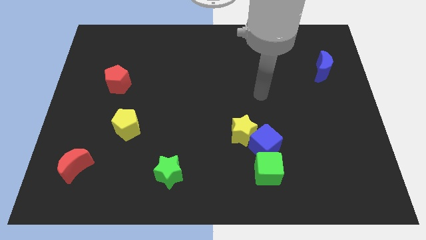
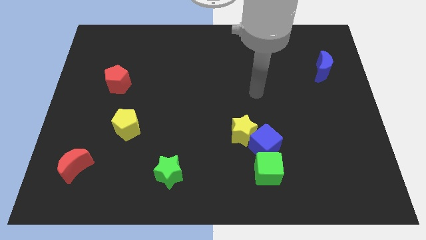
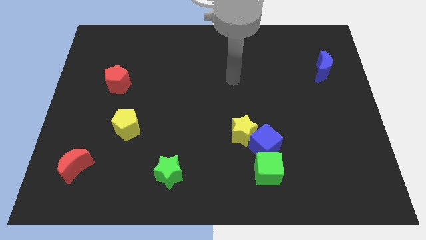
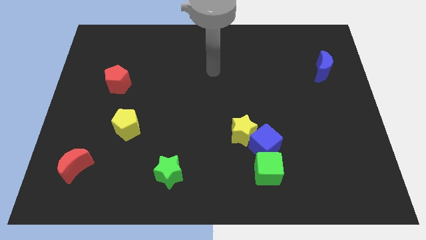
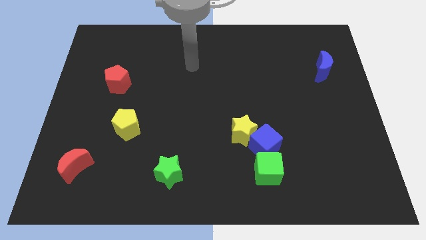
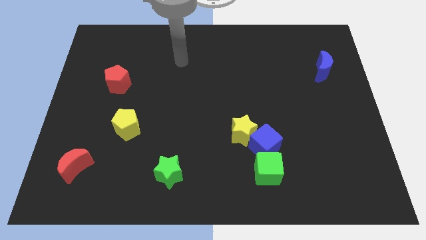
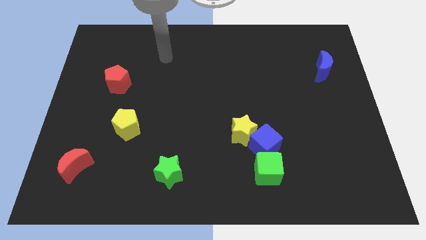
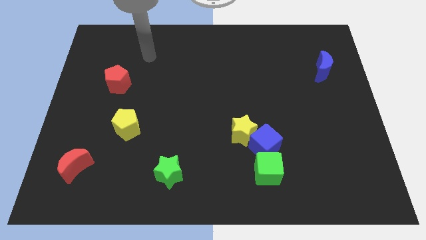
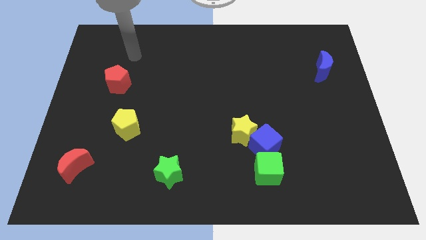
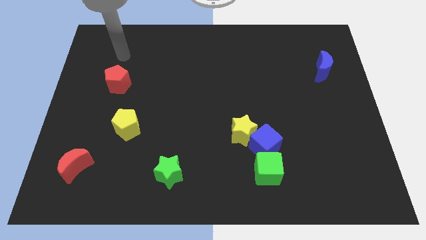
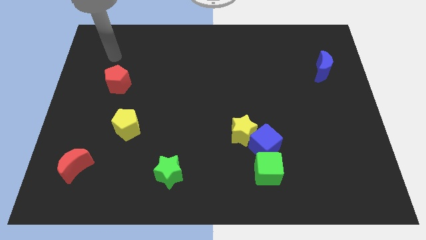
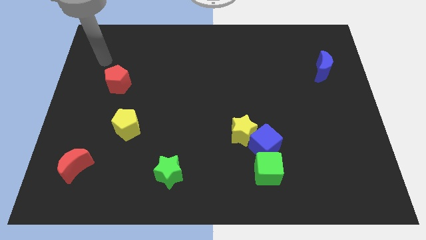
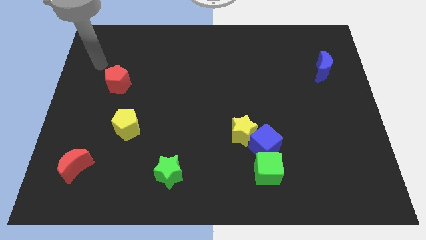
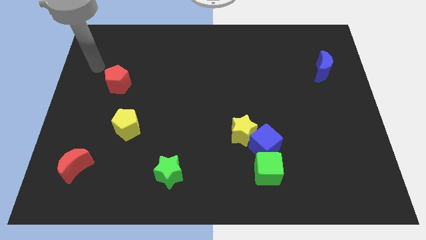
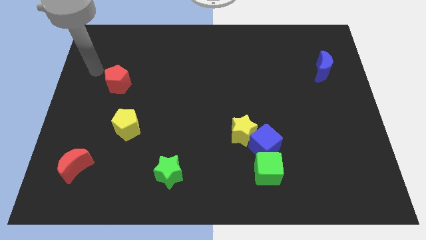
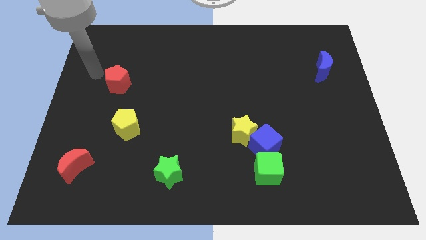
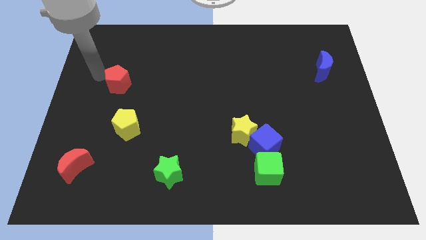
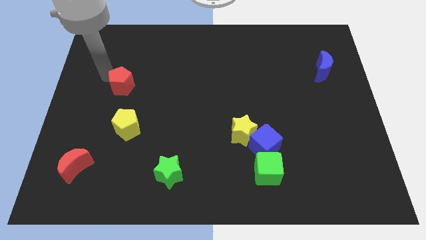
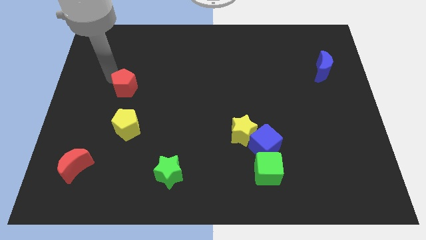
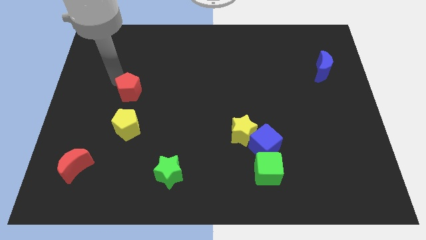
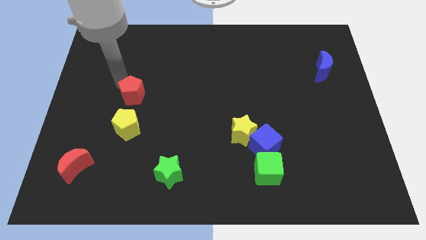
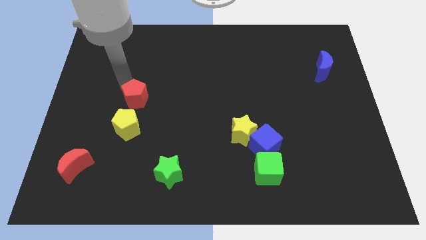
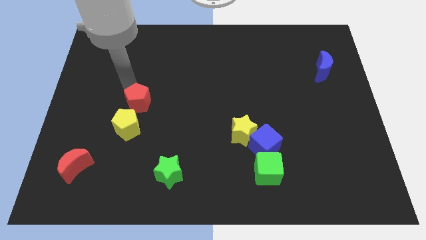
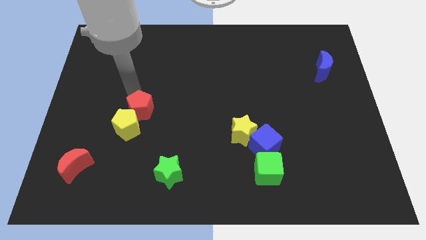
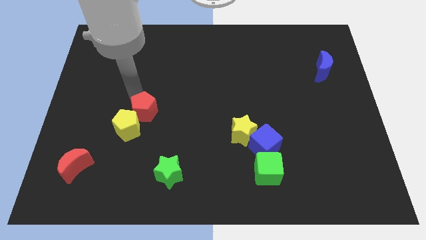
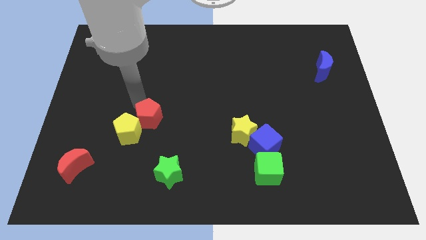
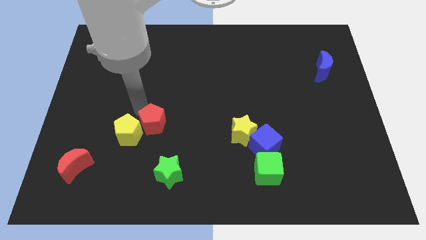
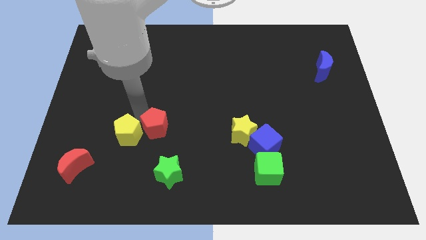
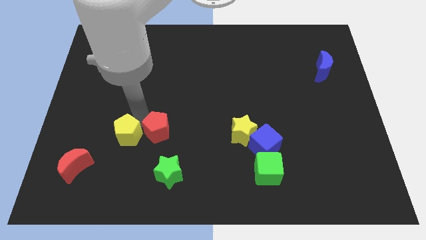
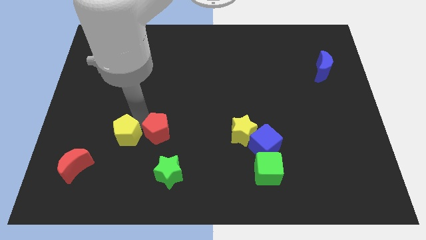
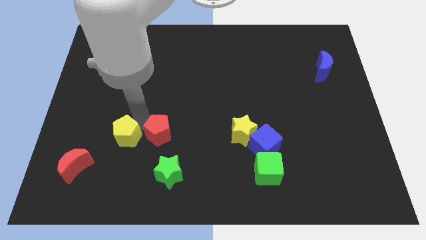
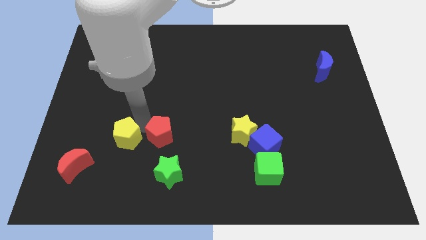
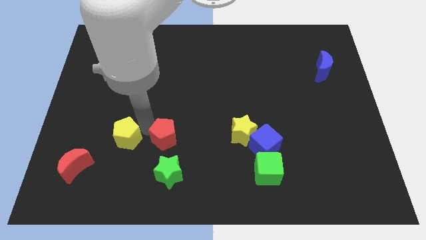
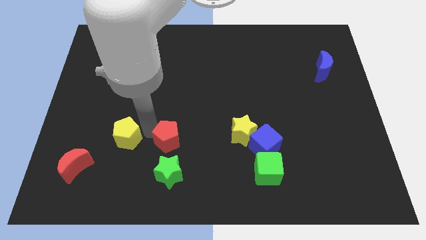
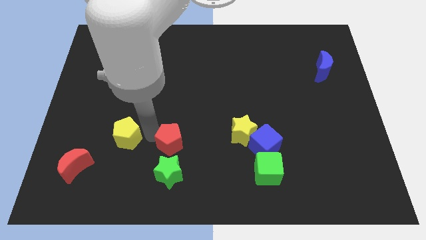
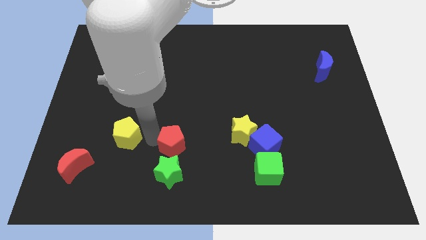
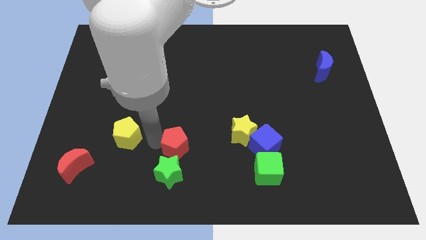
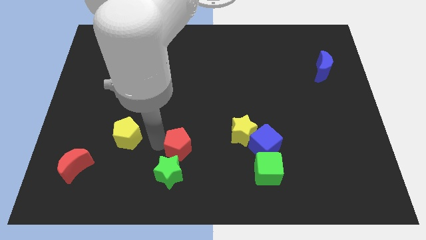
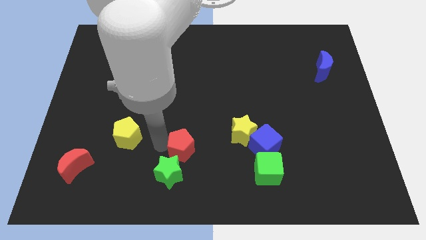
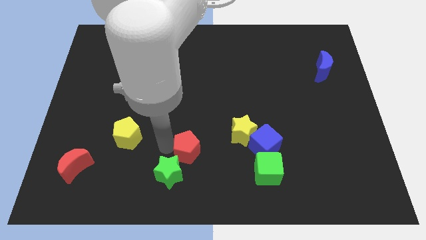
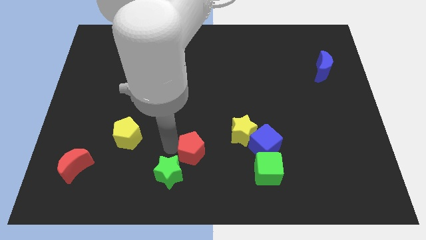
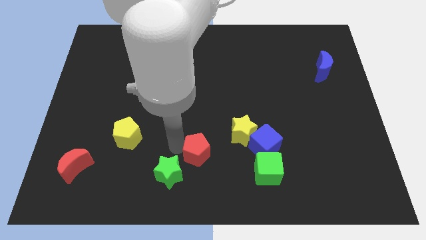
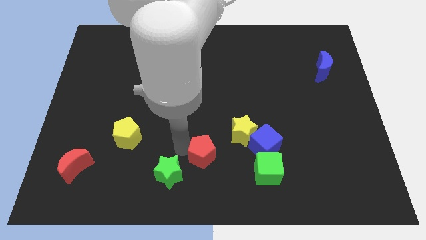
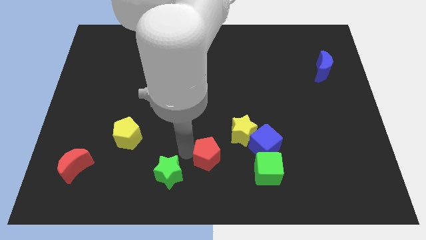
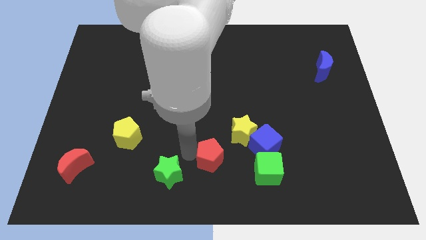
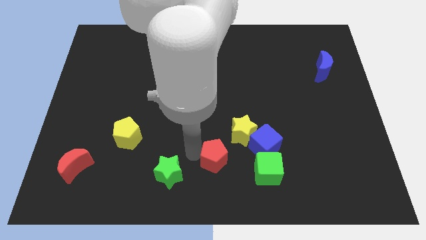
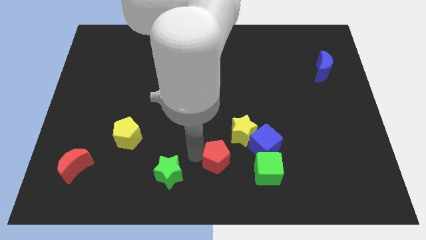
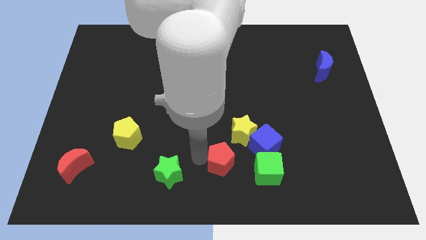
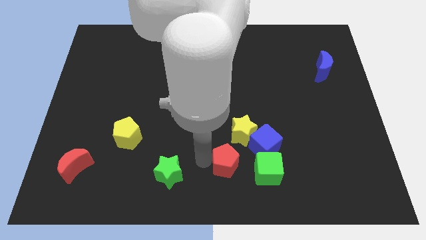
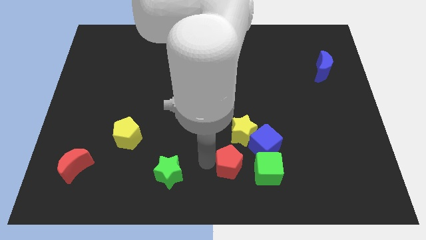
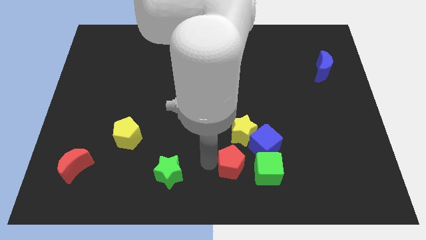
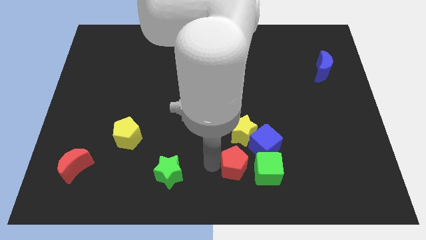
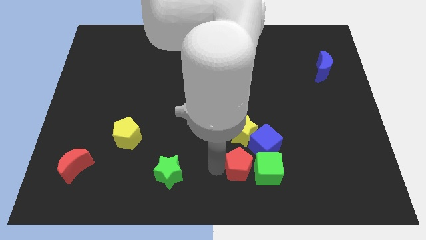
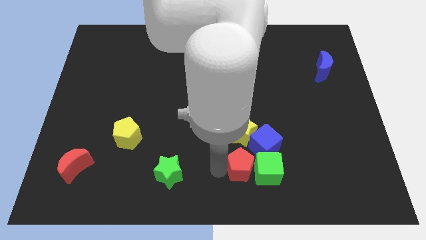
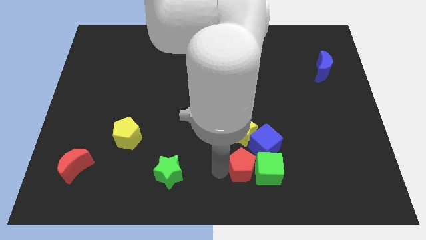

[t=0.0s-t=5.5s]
push the red pentagon close to the green cube

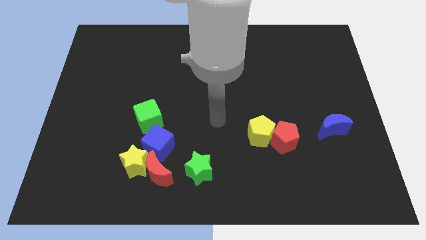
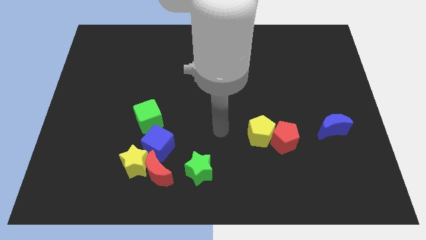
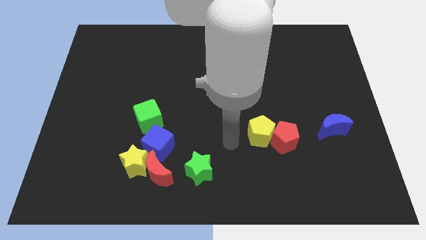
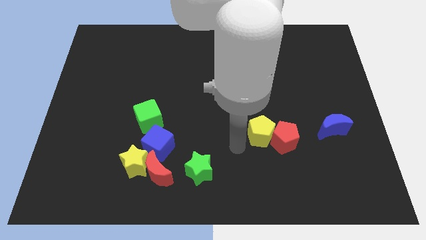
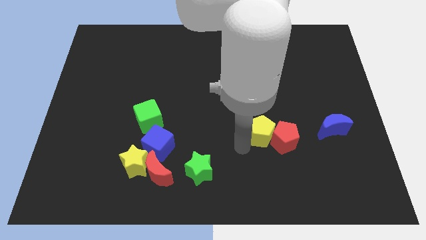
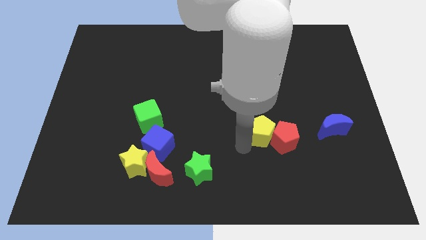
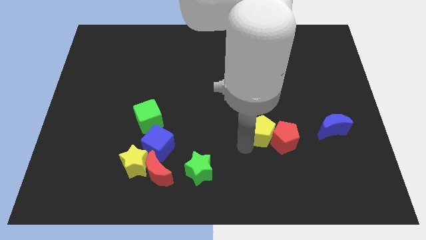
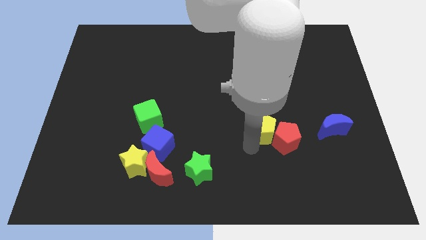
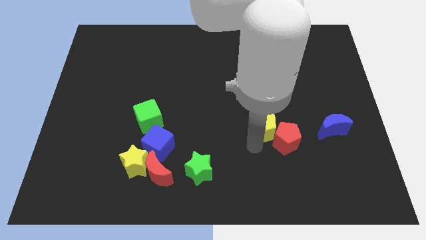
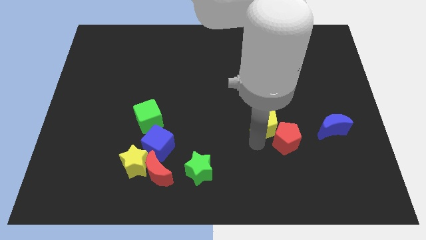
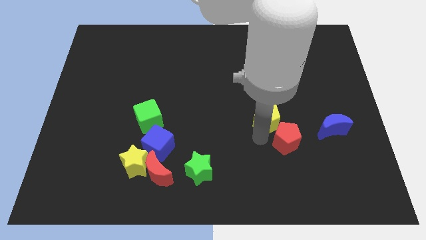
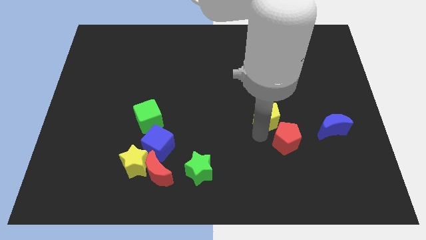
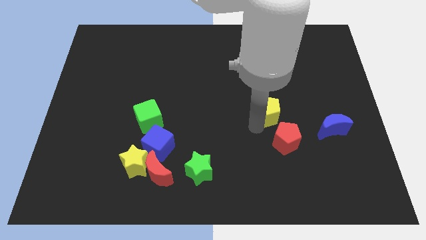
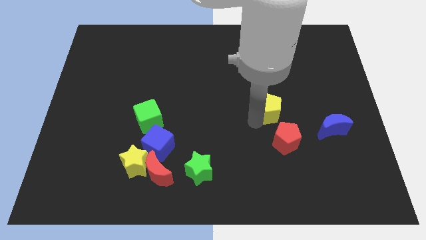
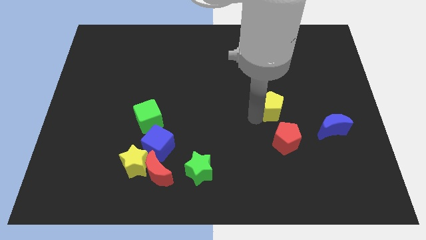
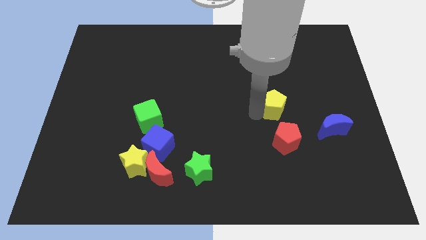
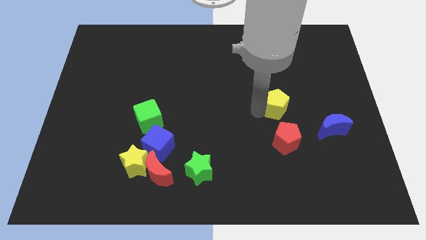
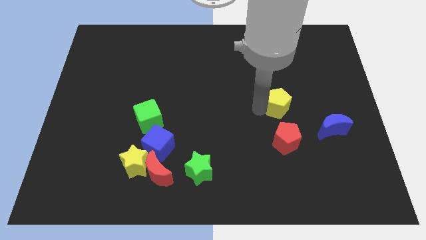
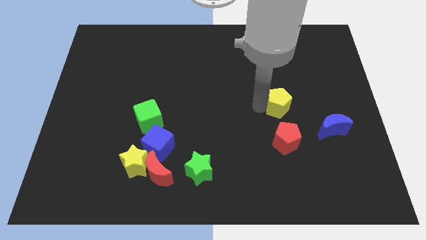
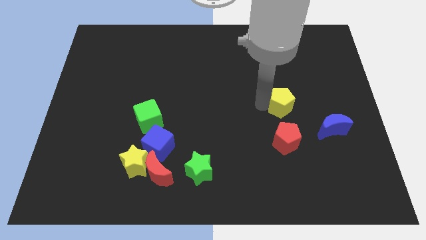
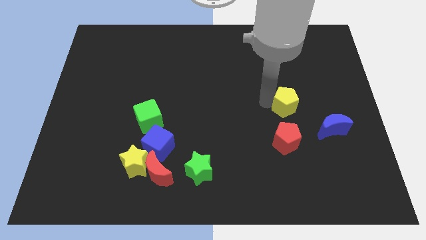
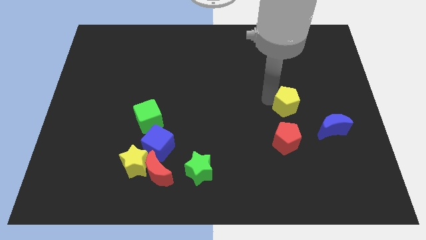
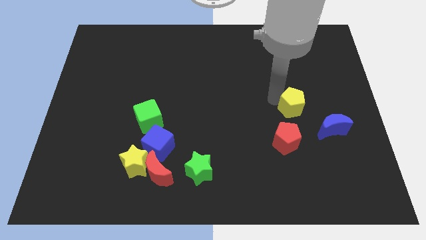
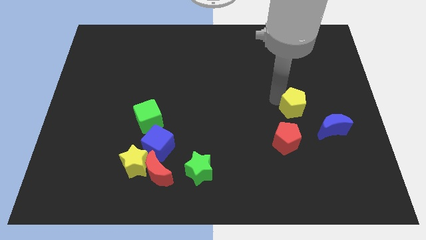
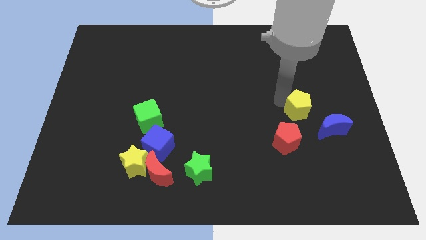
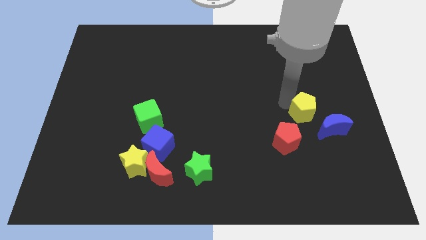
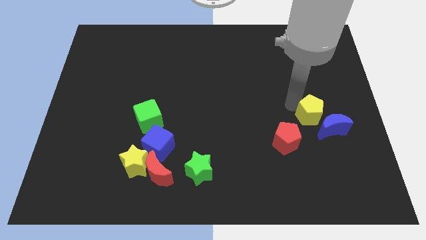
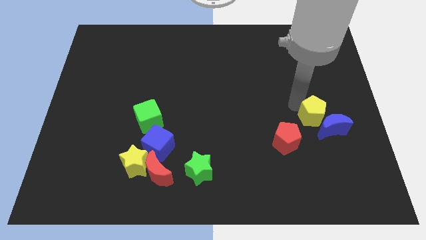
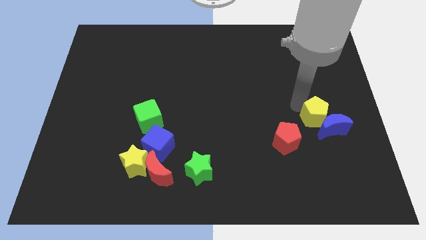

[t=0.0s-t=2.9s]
move the yellow pentagon next to the blue moon

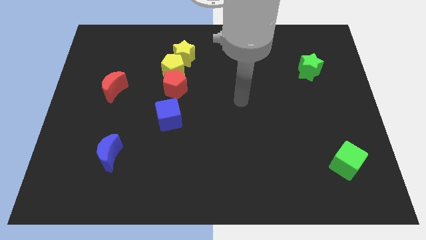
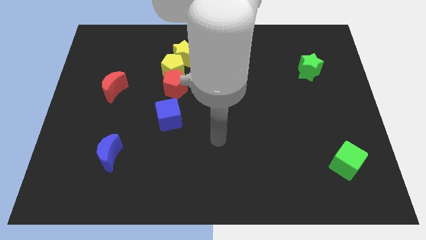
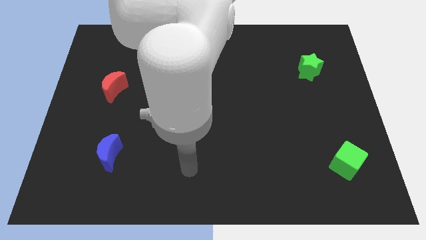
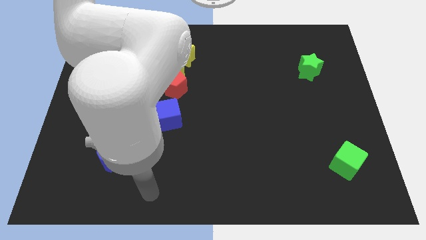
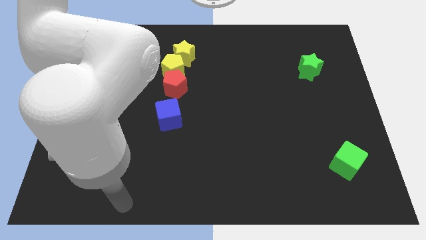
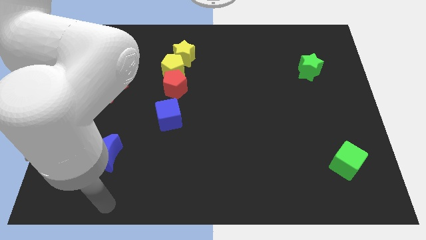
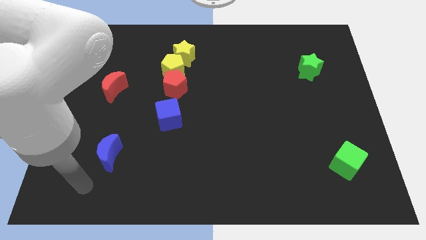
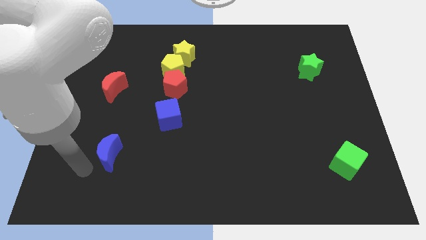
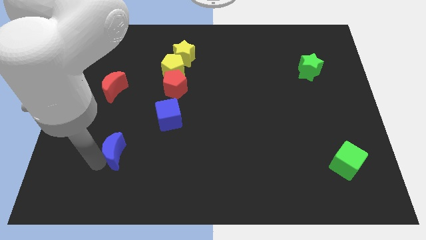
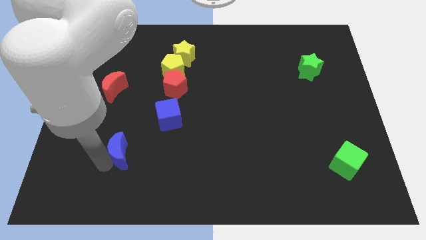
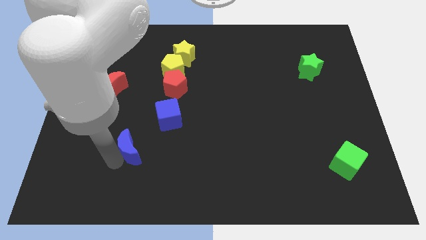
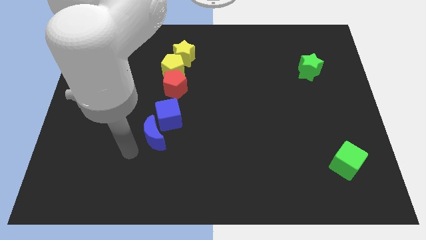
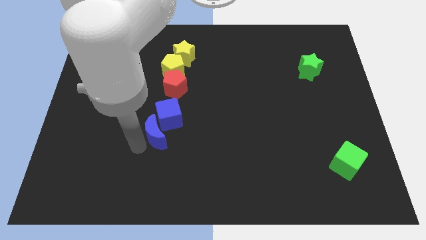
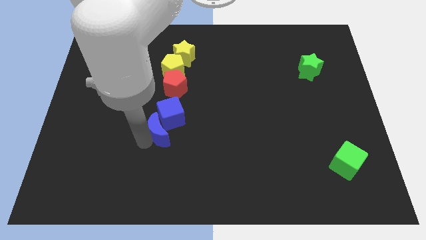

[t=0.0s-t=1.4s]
move the blue moon to the blue cube
